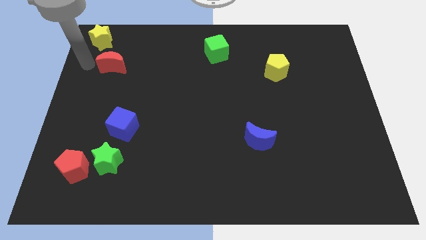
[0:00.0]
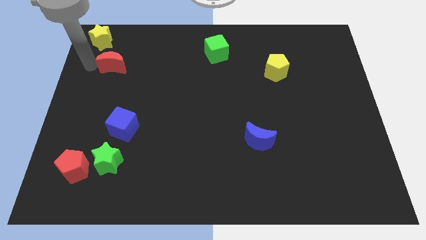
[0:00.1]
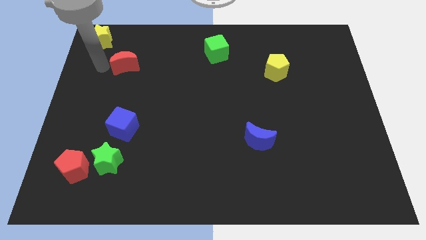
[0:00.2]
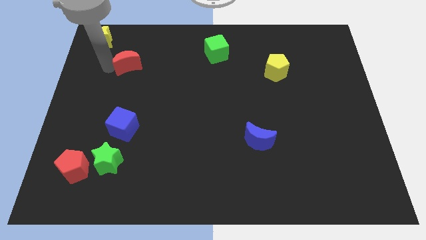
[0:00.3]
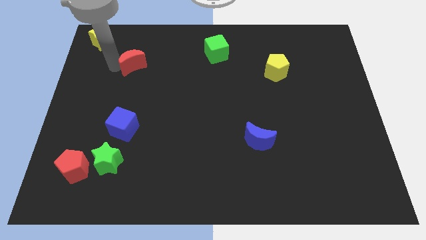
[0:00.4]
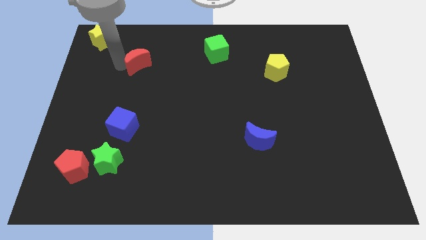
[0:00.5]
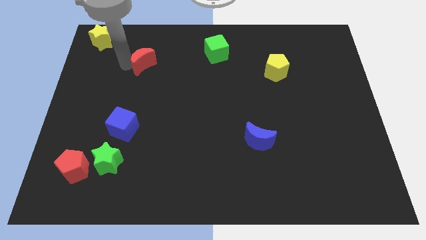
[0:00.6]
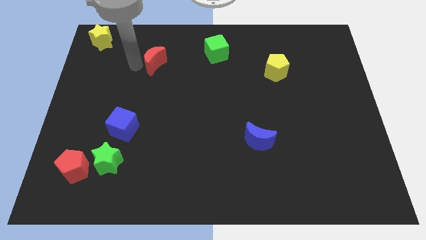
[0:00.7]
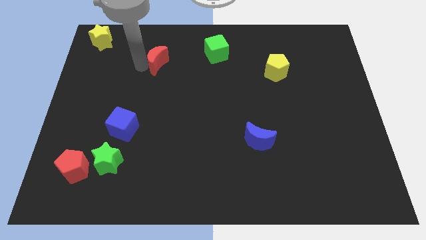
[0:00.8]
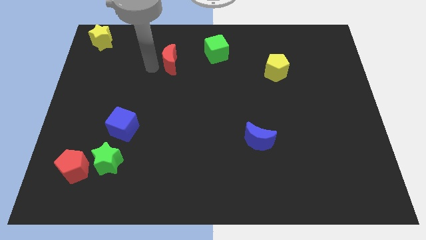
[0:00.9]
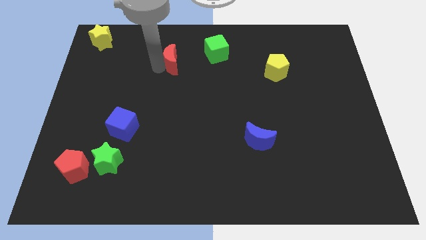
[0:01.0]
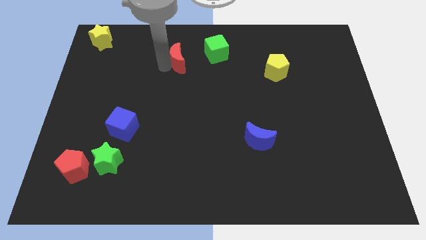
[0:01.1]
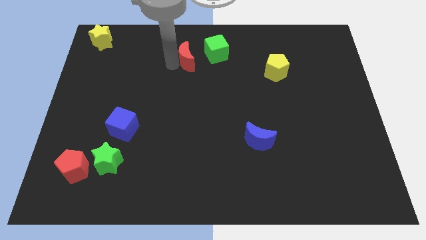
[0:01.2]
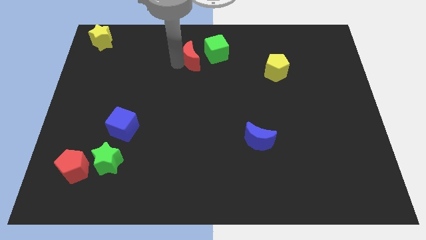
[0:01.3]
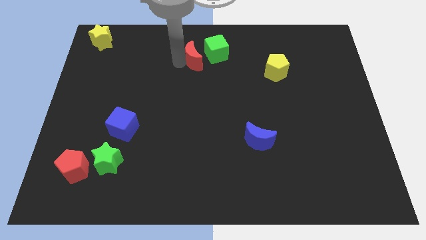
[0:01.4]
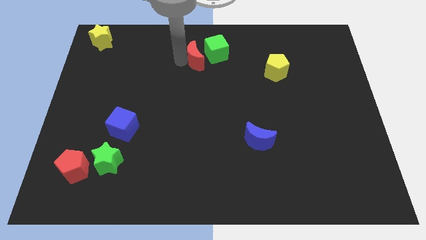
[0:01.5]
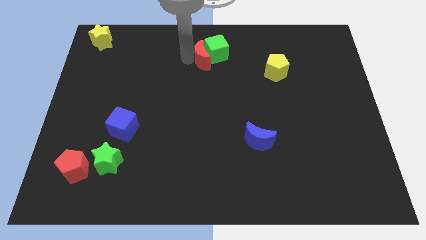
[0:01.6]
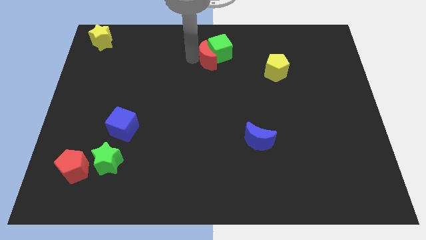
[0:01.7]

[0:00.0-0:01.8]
push the red moon into the green cube diagonally

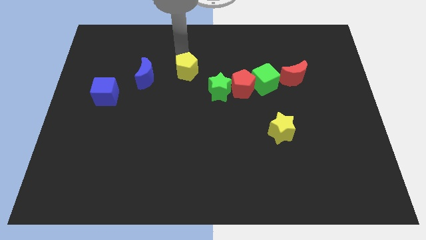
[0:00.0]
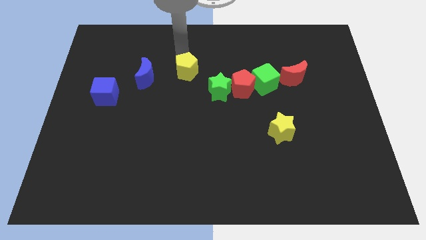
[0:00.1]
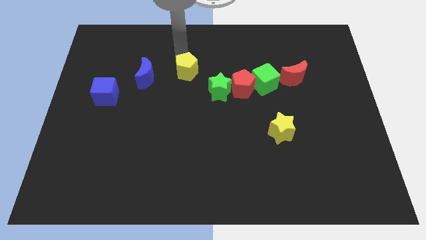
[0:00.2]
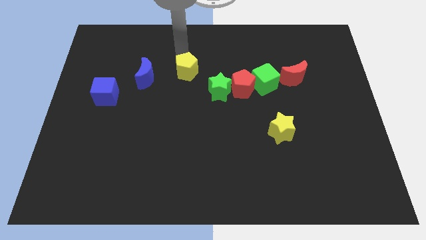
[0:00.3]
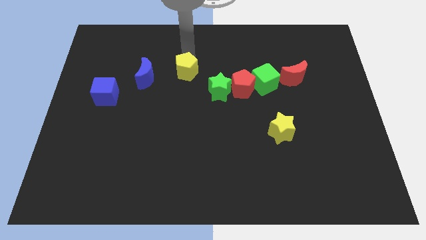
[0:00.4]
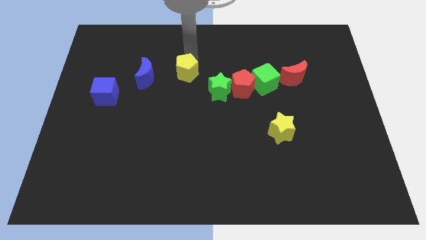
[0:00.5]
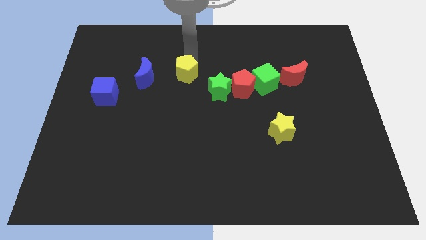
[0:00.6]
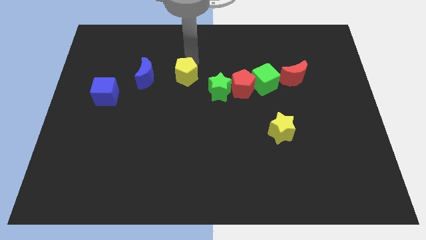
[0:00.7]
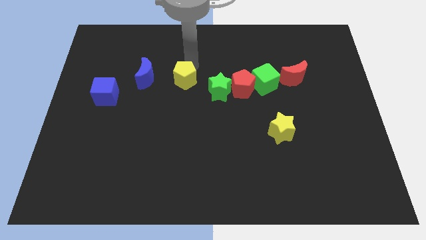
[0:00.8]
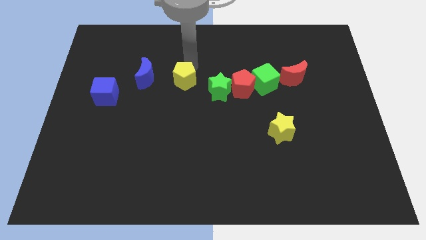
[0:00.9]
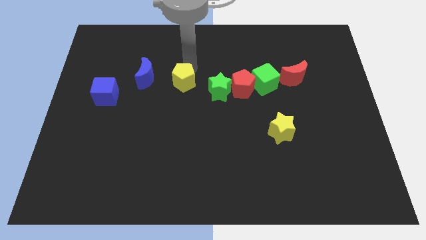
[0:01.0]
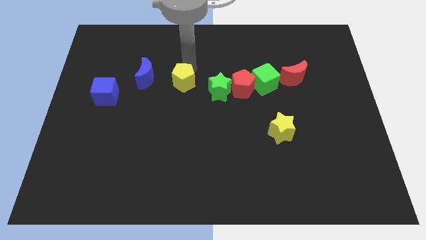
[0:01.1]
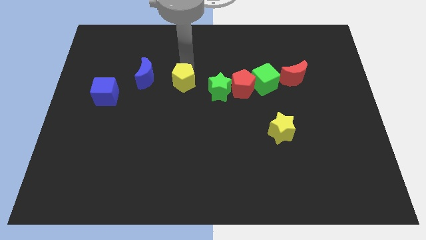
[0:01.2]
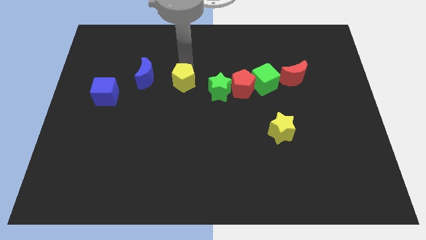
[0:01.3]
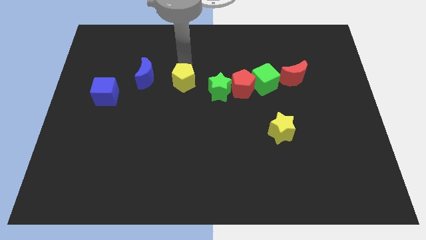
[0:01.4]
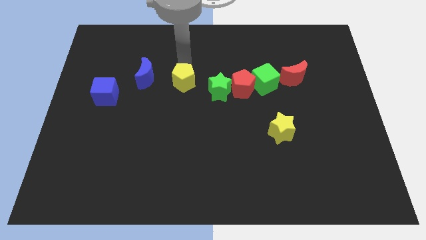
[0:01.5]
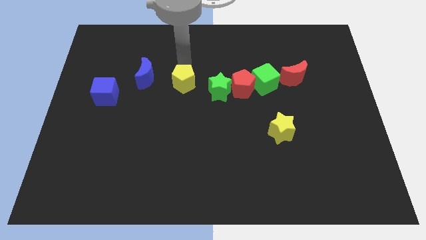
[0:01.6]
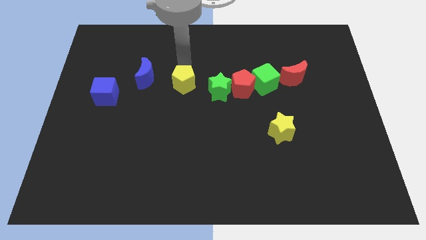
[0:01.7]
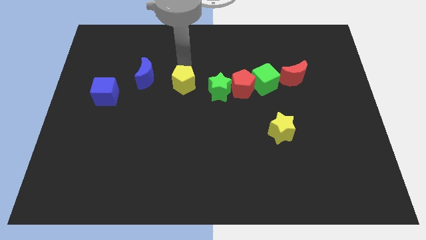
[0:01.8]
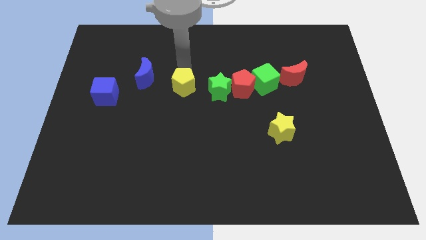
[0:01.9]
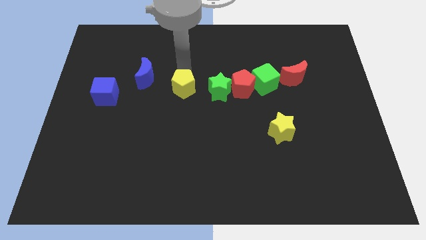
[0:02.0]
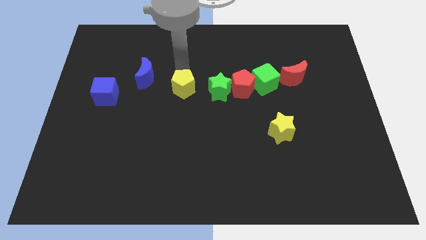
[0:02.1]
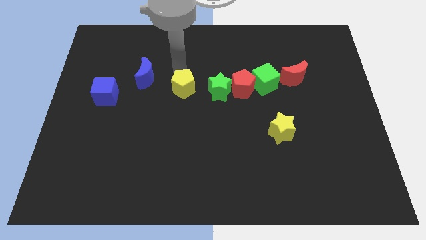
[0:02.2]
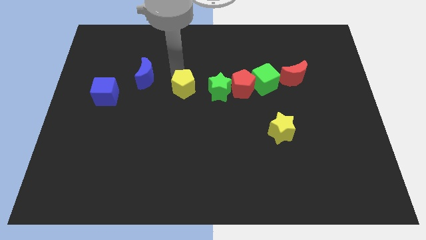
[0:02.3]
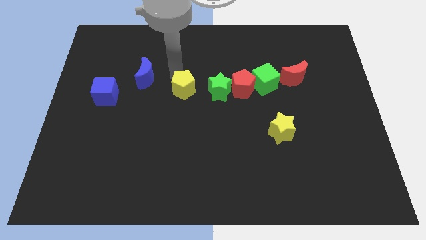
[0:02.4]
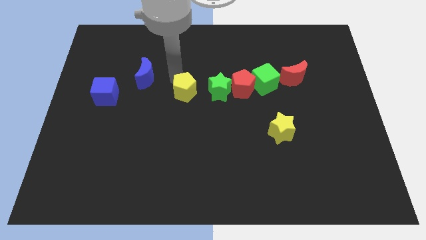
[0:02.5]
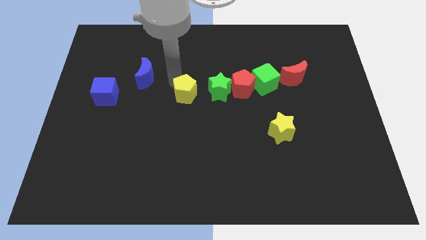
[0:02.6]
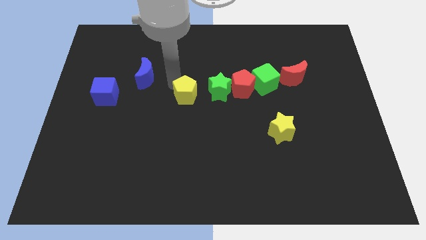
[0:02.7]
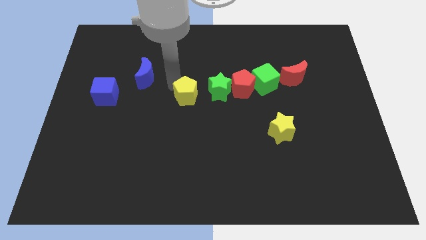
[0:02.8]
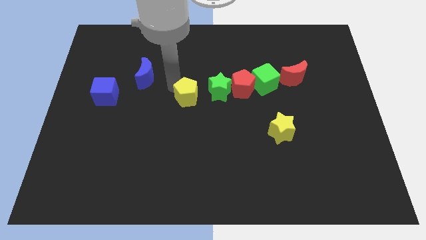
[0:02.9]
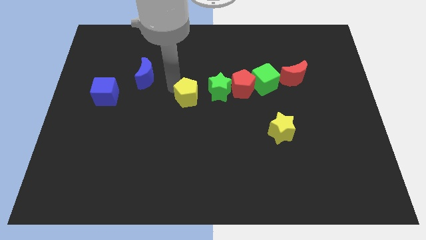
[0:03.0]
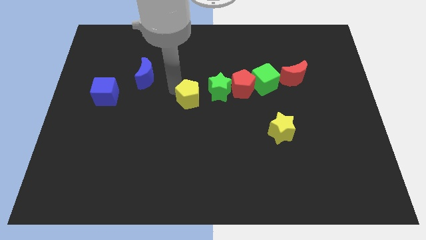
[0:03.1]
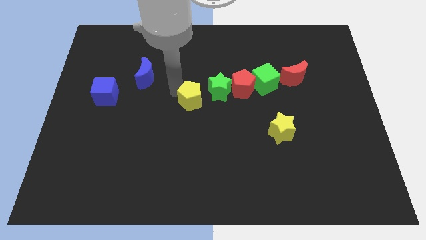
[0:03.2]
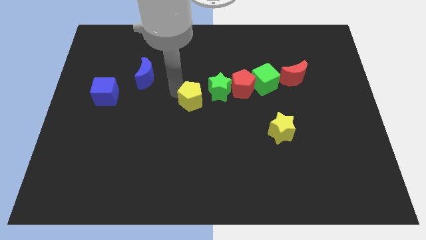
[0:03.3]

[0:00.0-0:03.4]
push the yellow pentagon left to the green star

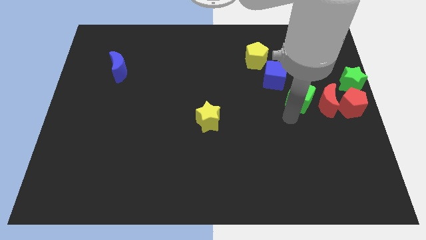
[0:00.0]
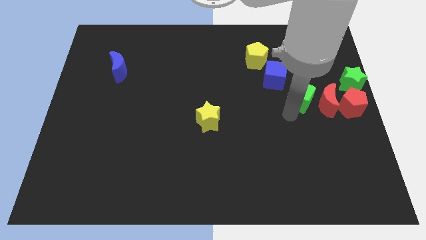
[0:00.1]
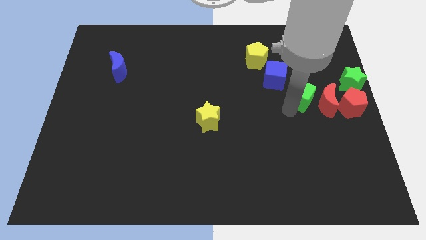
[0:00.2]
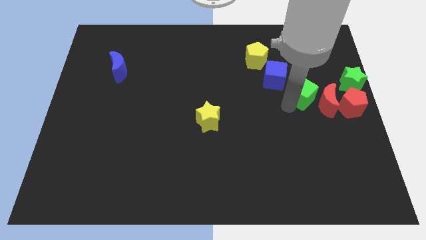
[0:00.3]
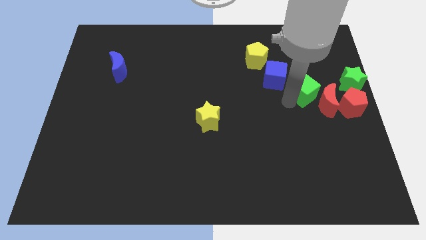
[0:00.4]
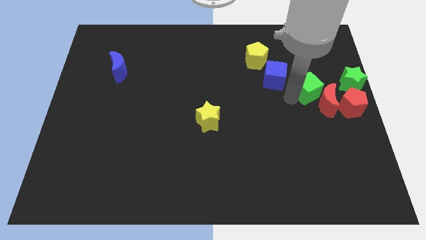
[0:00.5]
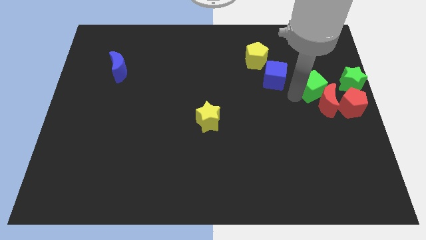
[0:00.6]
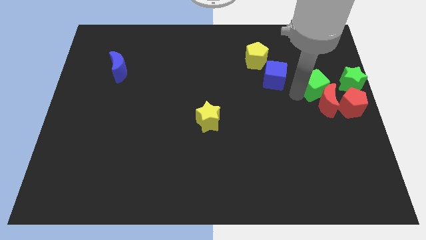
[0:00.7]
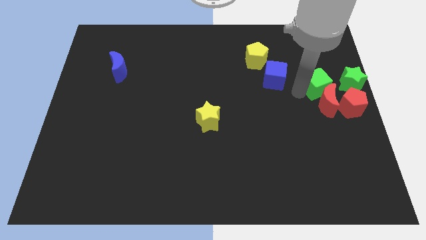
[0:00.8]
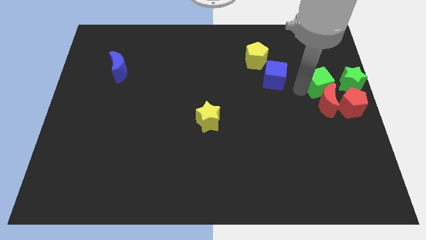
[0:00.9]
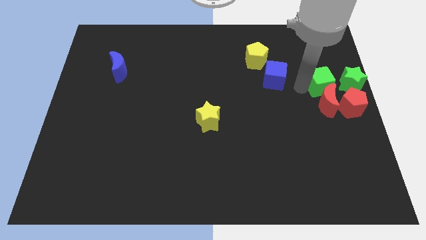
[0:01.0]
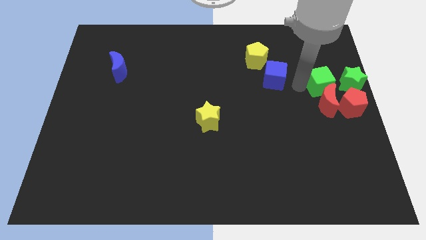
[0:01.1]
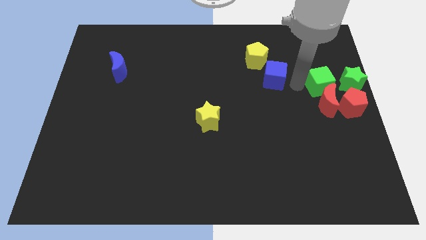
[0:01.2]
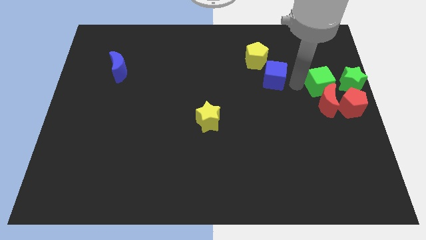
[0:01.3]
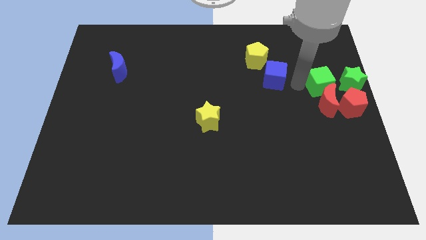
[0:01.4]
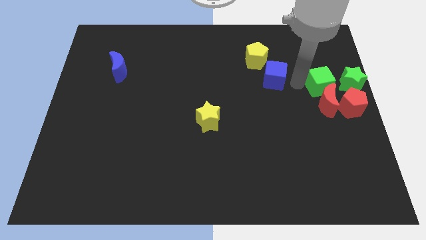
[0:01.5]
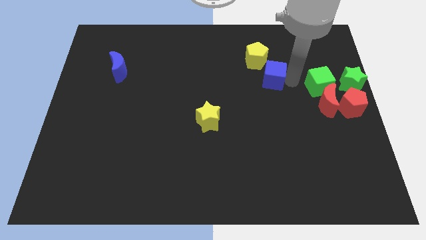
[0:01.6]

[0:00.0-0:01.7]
place green cube above the red moon

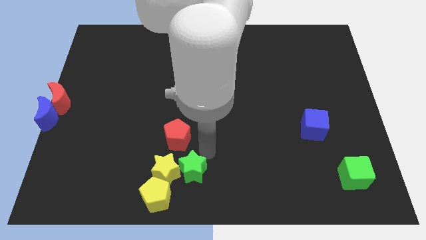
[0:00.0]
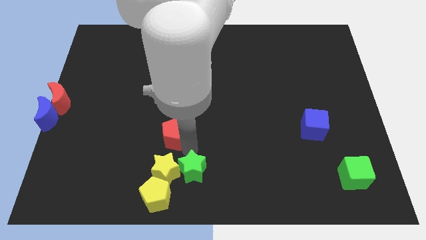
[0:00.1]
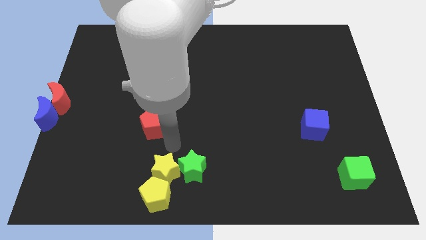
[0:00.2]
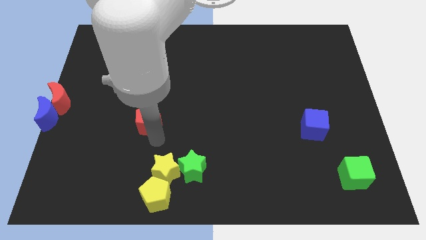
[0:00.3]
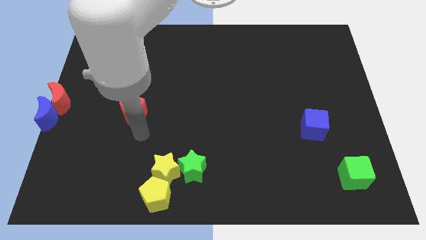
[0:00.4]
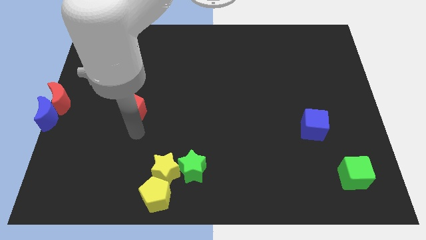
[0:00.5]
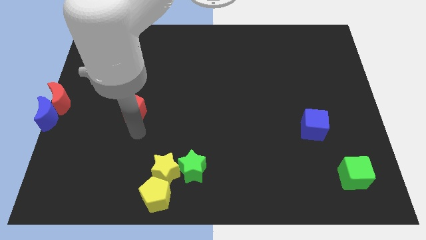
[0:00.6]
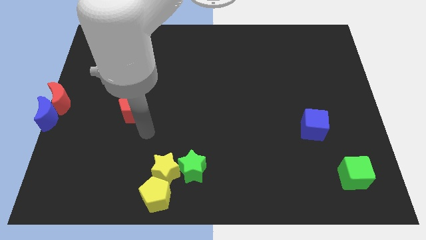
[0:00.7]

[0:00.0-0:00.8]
move the red pentagon to the left of the board

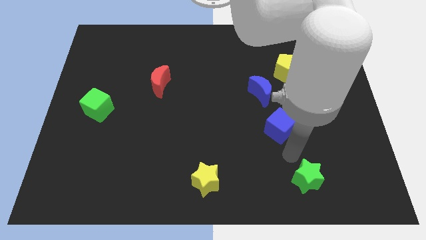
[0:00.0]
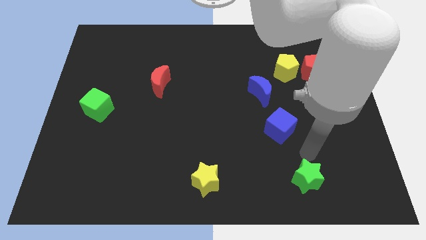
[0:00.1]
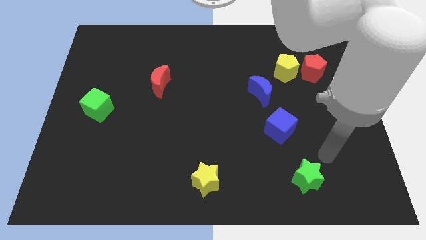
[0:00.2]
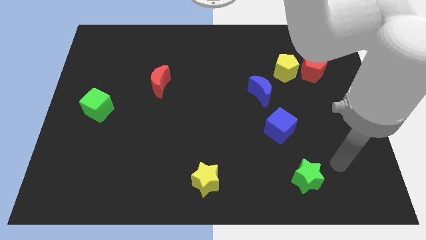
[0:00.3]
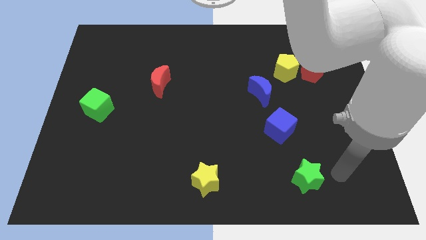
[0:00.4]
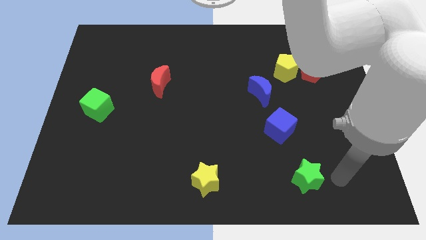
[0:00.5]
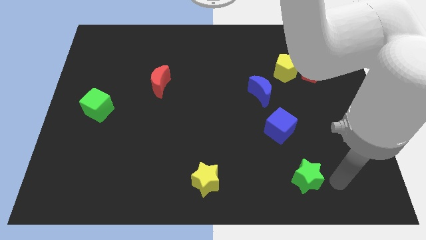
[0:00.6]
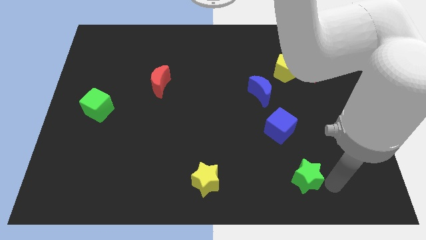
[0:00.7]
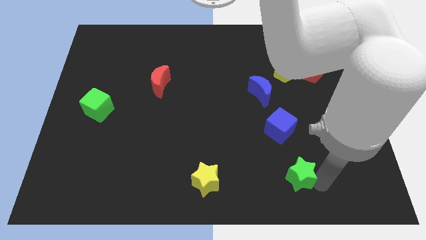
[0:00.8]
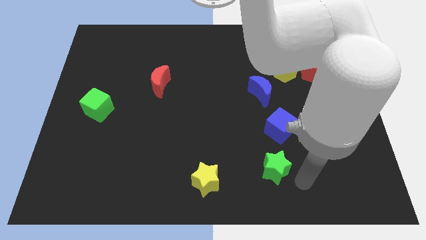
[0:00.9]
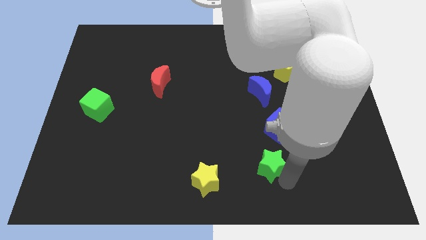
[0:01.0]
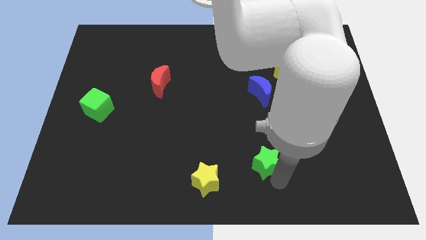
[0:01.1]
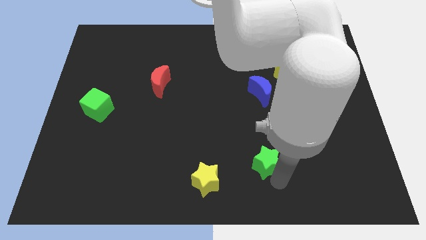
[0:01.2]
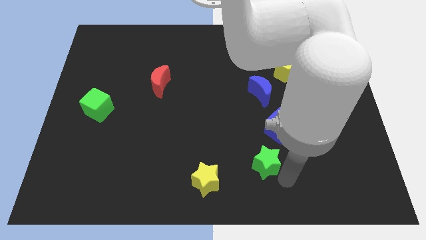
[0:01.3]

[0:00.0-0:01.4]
move the green star diagonally bottom left to the blue cube
